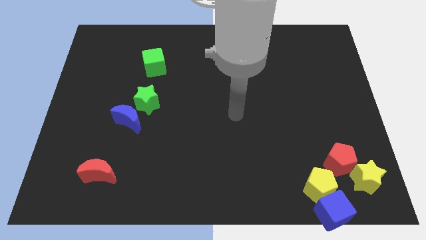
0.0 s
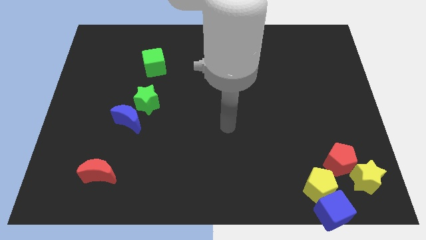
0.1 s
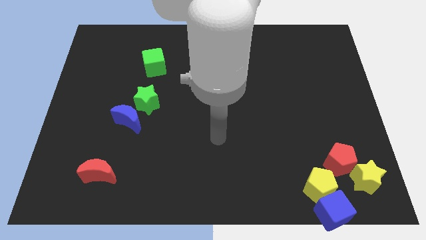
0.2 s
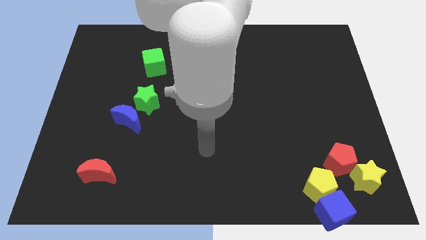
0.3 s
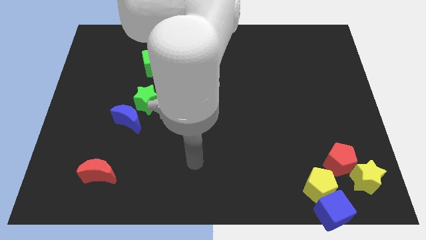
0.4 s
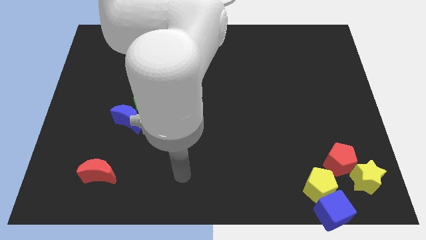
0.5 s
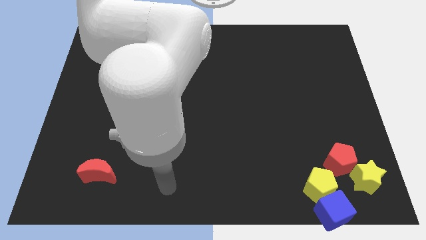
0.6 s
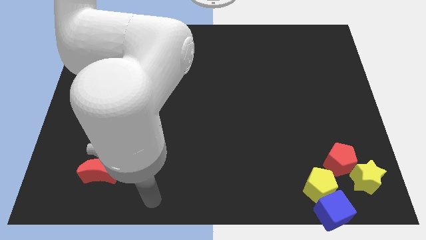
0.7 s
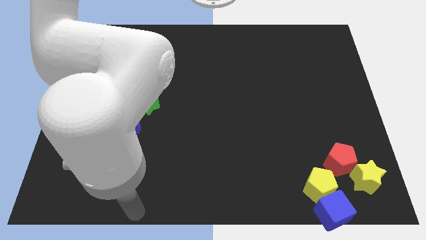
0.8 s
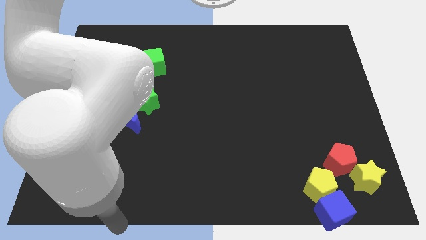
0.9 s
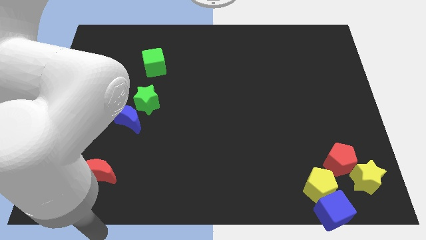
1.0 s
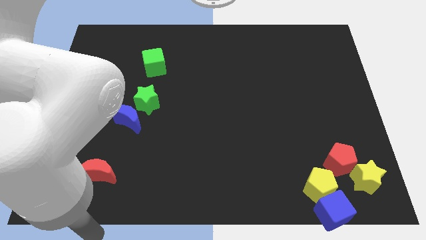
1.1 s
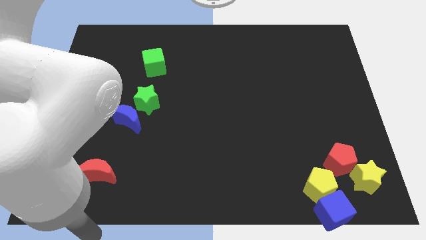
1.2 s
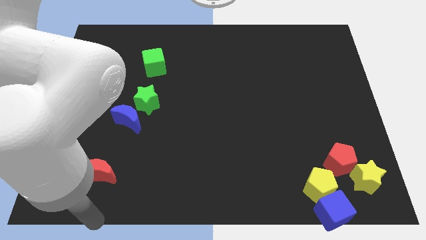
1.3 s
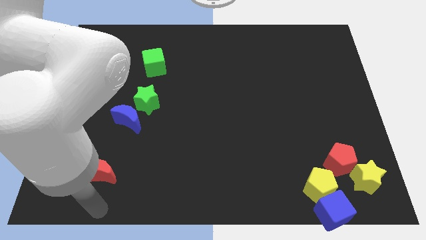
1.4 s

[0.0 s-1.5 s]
move your arm towards the red crescent

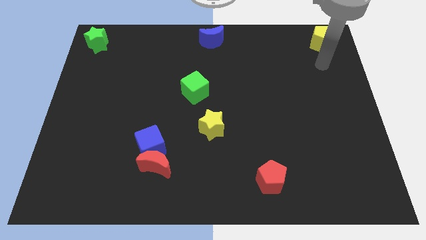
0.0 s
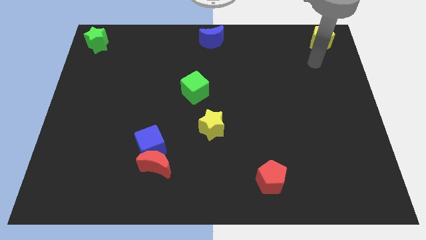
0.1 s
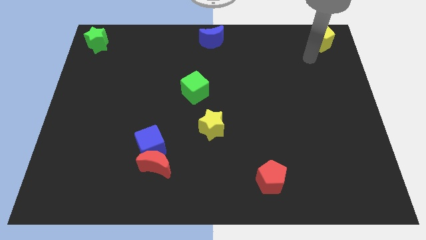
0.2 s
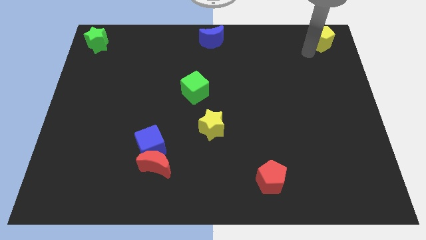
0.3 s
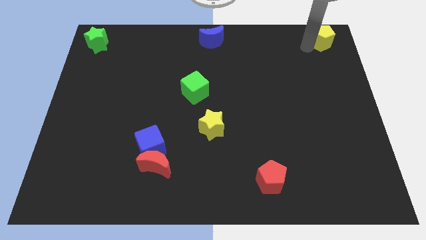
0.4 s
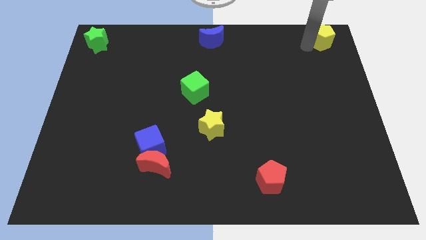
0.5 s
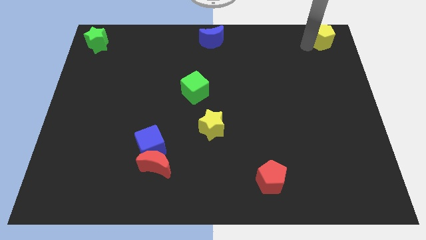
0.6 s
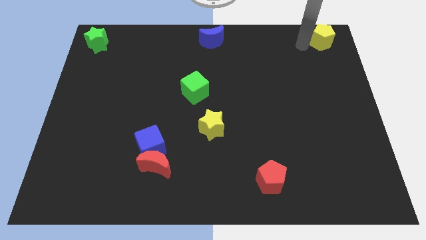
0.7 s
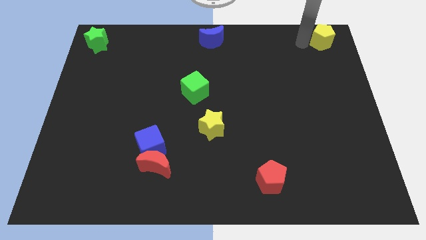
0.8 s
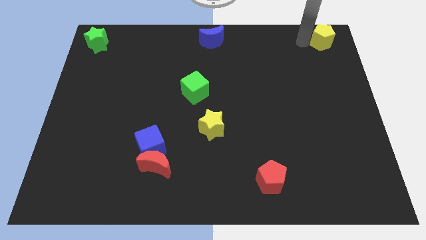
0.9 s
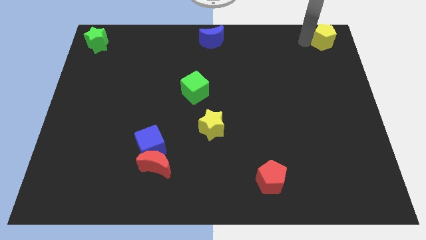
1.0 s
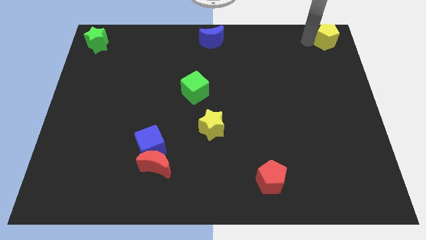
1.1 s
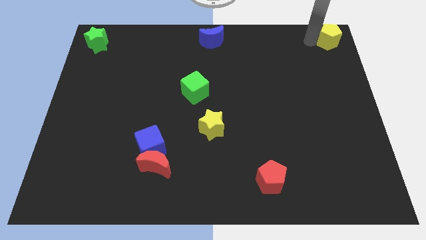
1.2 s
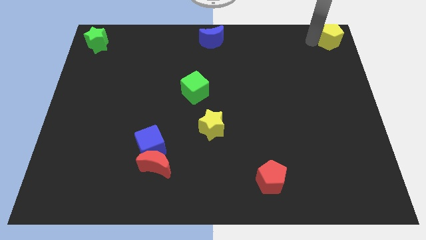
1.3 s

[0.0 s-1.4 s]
move the yellow pentagon to the top right

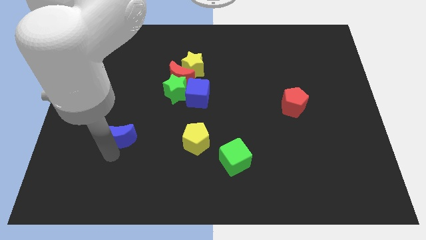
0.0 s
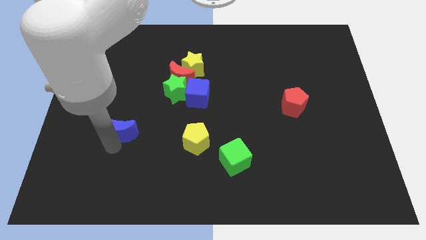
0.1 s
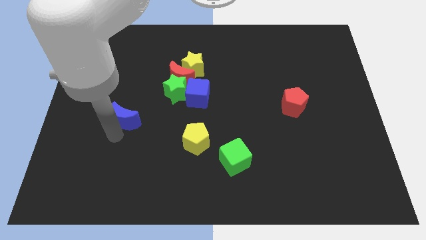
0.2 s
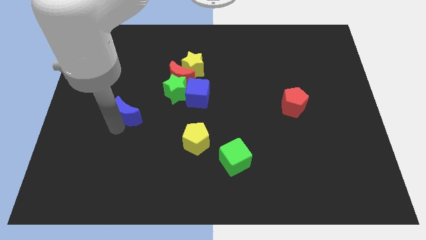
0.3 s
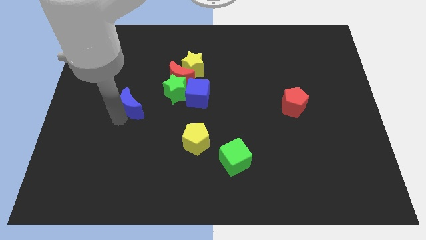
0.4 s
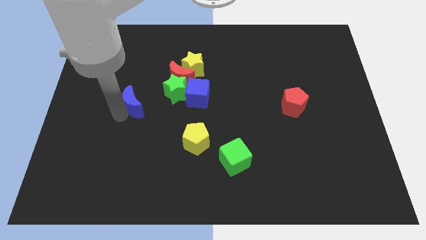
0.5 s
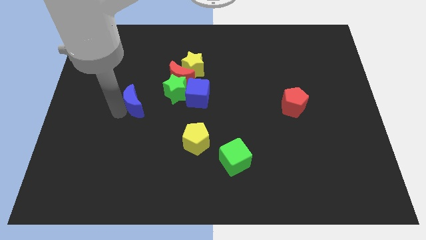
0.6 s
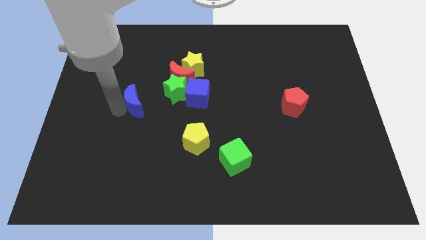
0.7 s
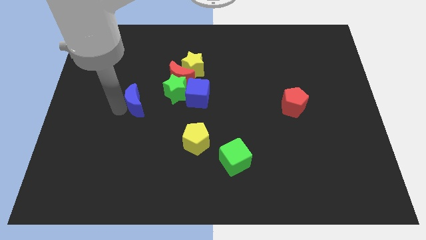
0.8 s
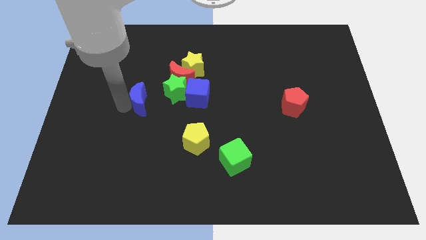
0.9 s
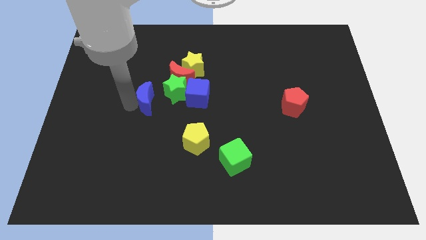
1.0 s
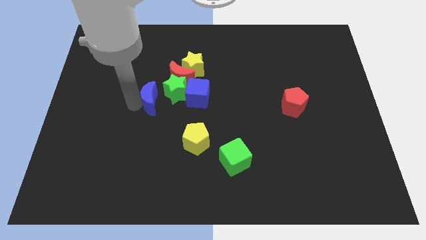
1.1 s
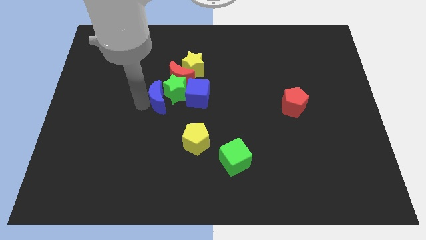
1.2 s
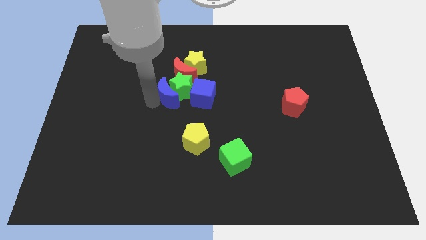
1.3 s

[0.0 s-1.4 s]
push the blue moon into the green star

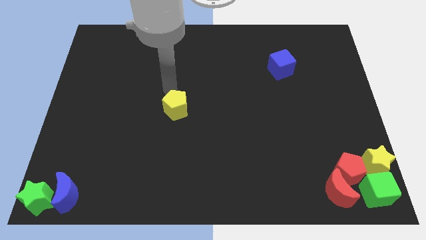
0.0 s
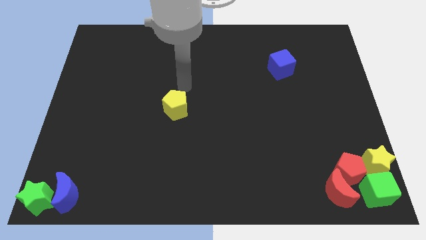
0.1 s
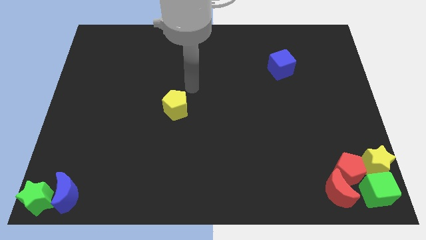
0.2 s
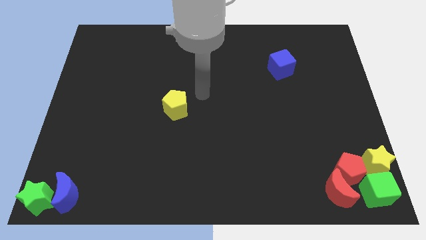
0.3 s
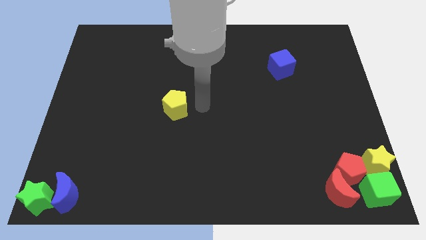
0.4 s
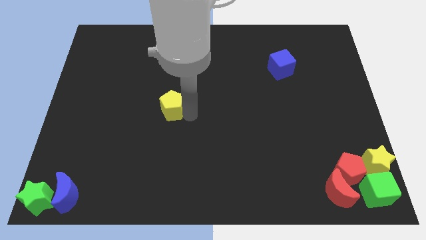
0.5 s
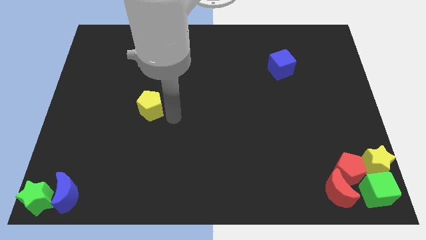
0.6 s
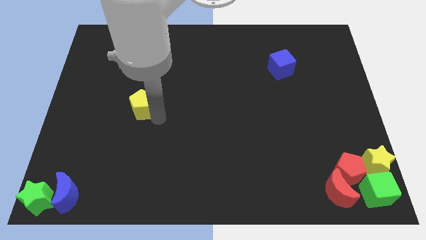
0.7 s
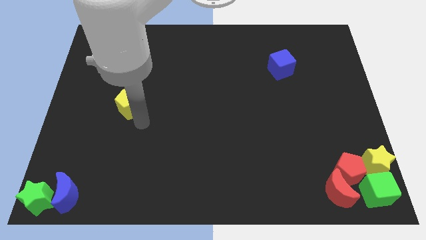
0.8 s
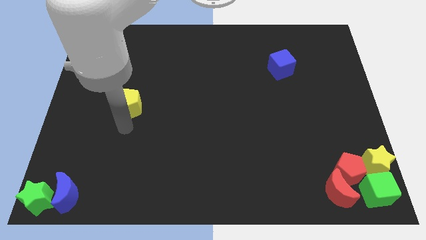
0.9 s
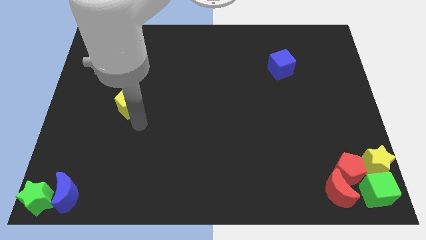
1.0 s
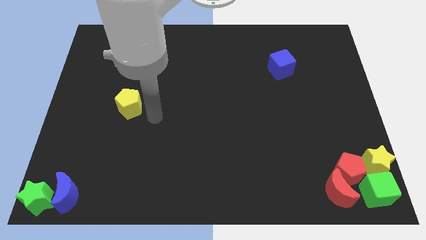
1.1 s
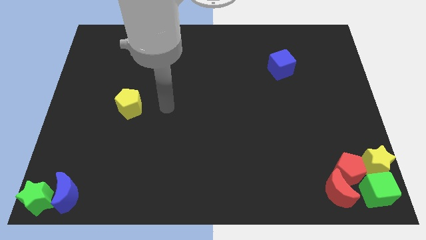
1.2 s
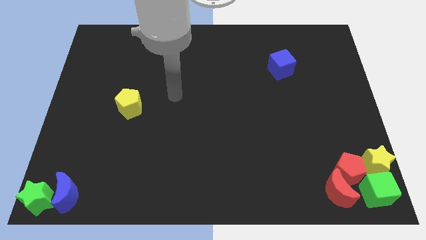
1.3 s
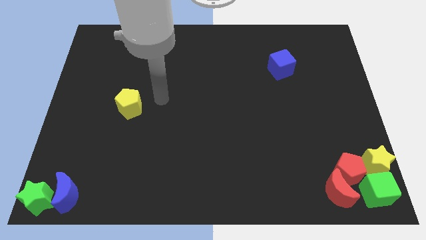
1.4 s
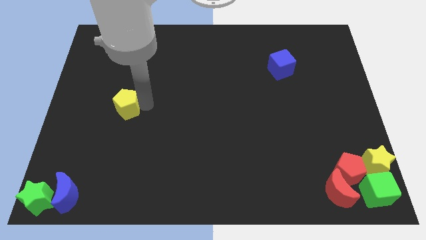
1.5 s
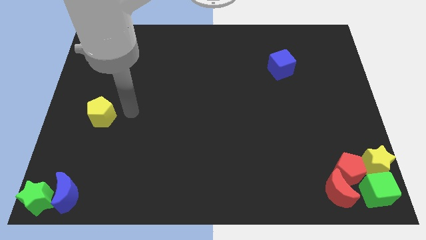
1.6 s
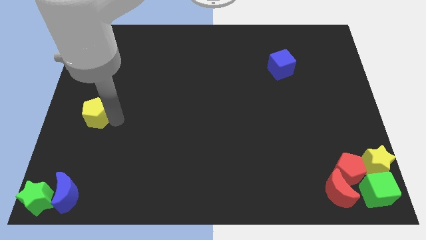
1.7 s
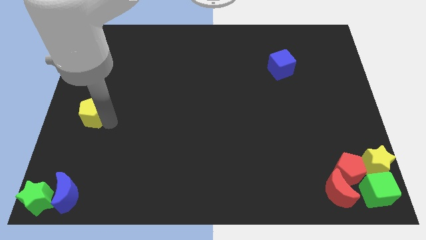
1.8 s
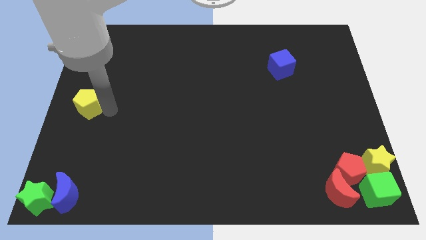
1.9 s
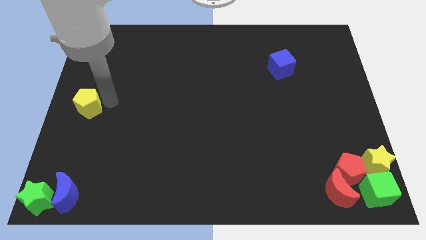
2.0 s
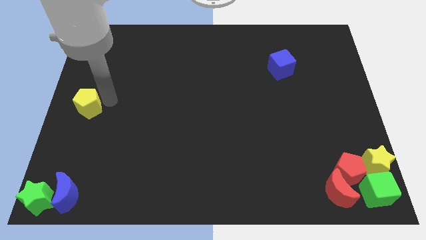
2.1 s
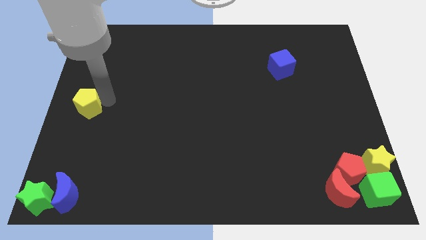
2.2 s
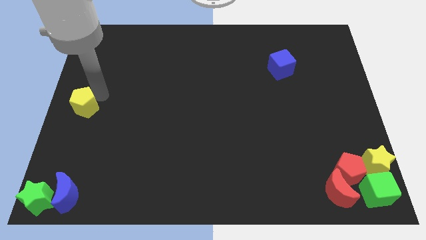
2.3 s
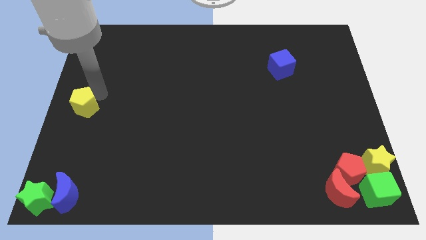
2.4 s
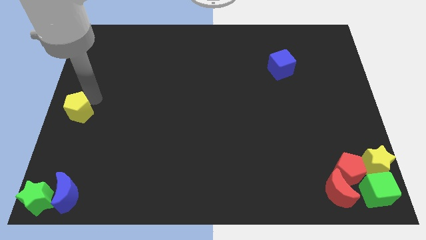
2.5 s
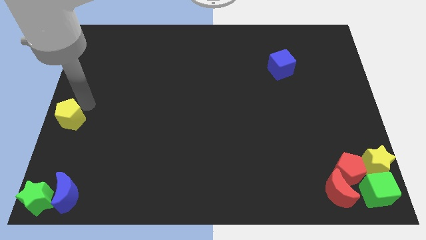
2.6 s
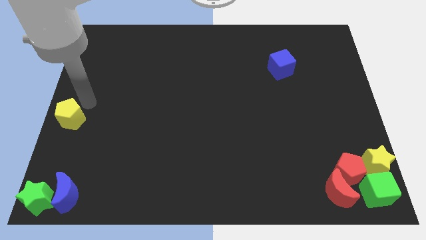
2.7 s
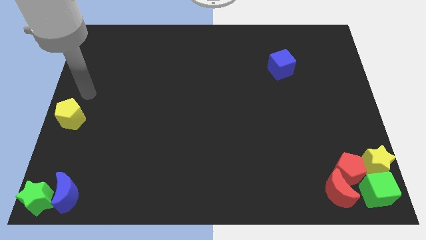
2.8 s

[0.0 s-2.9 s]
move the yellow pentagon to the center left

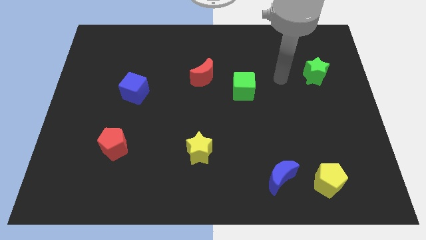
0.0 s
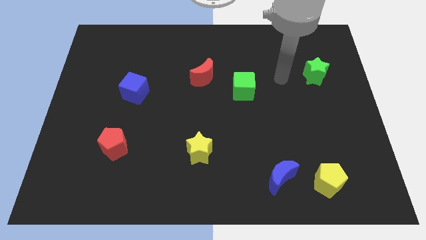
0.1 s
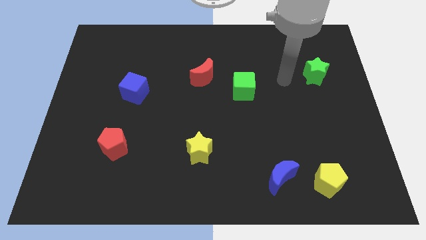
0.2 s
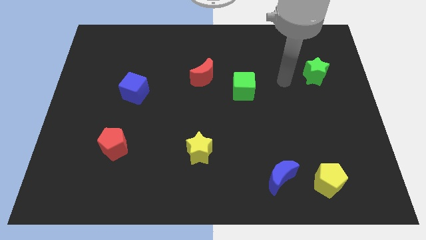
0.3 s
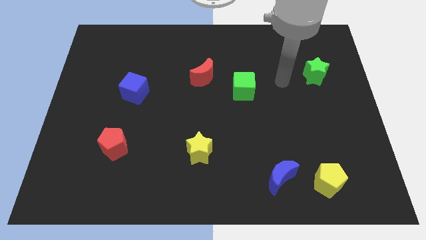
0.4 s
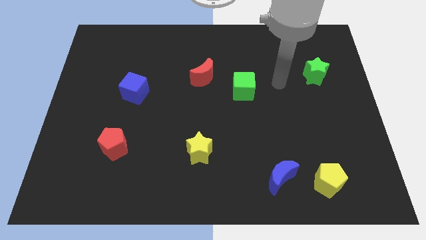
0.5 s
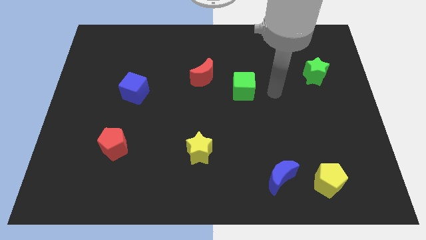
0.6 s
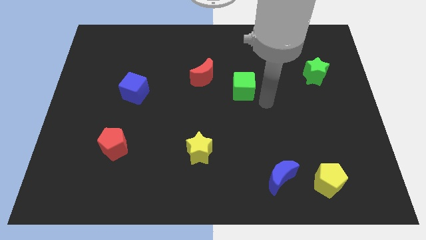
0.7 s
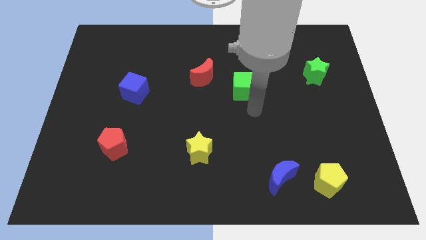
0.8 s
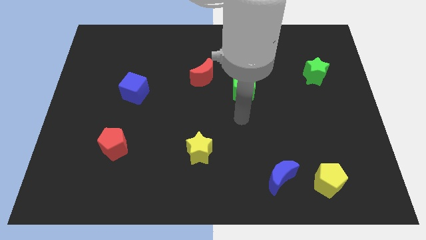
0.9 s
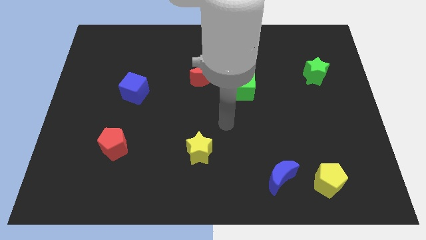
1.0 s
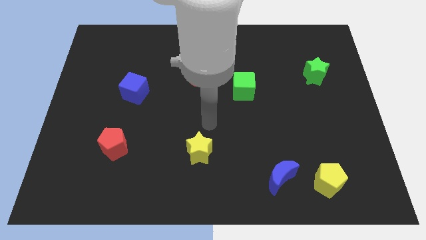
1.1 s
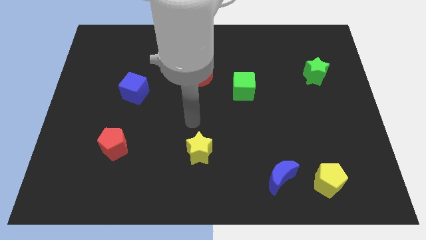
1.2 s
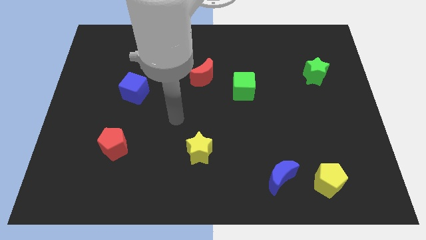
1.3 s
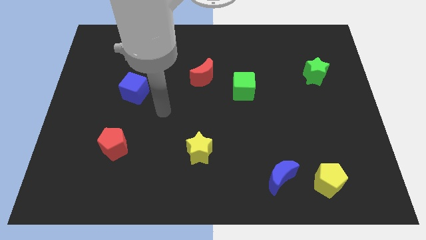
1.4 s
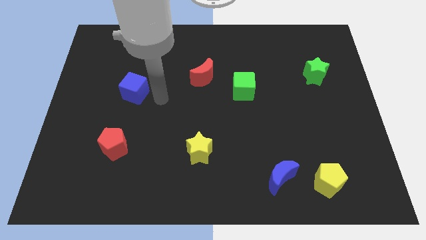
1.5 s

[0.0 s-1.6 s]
move your arm to the right side of the blue cube
